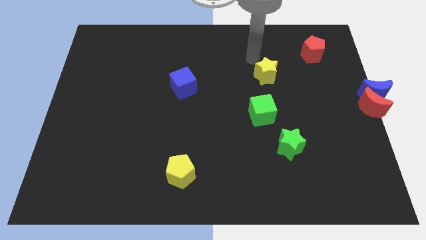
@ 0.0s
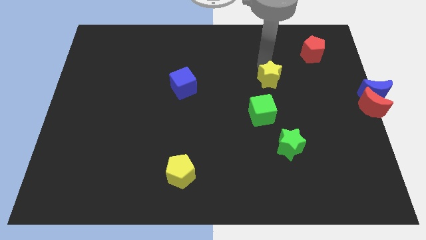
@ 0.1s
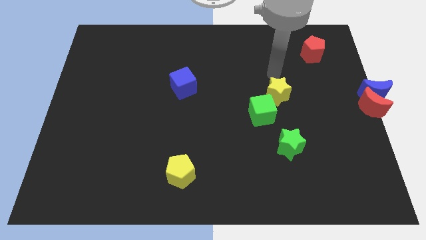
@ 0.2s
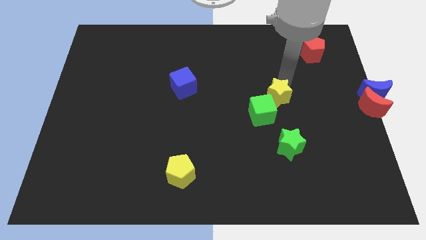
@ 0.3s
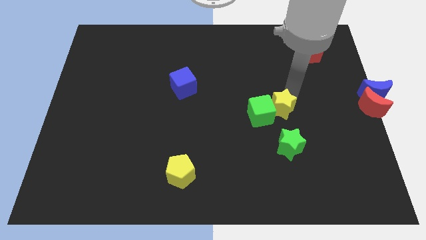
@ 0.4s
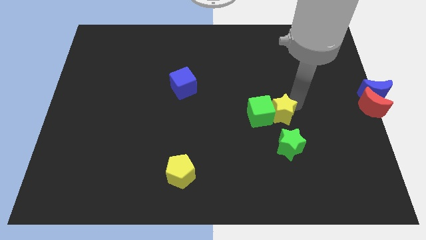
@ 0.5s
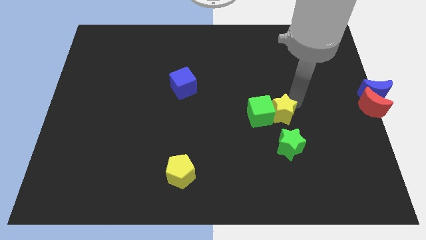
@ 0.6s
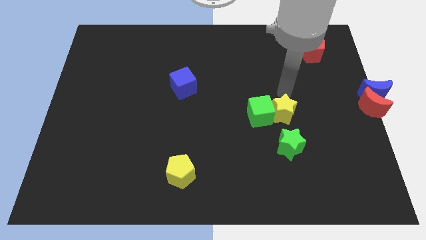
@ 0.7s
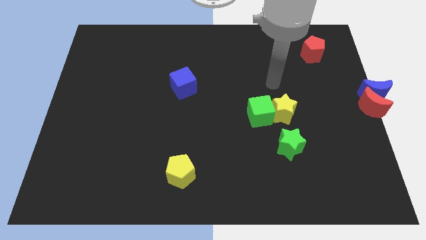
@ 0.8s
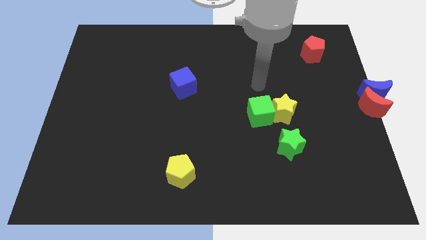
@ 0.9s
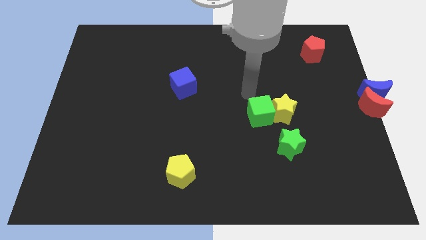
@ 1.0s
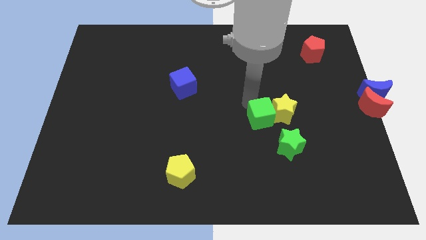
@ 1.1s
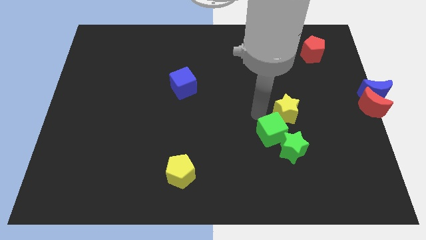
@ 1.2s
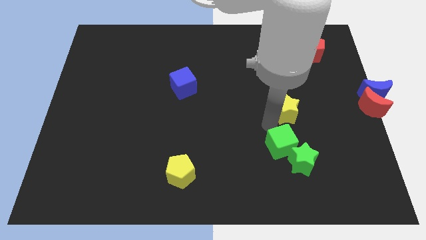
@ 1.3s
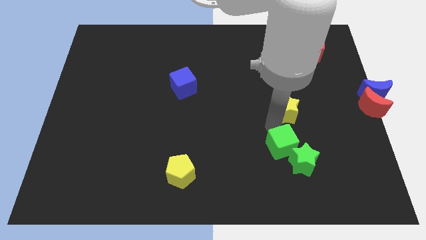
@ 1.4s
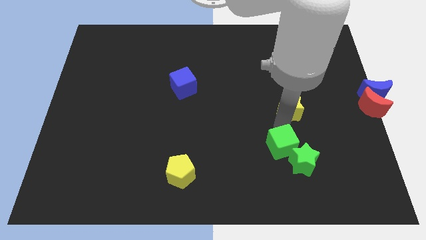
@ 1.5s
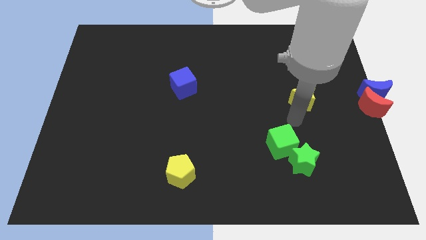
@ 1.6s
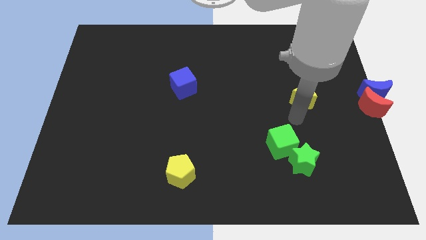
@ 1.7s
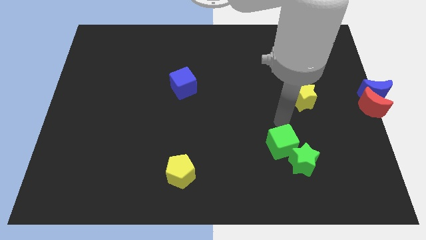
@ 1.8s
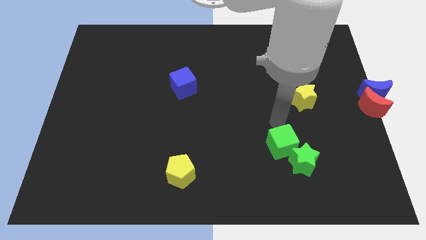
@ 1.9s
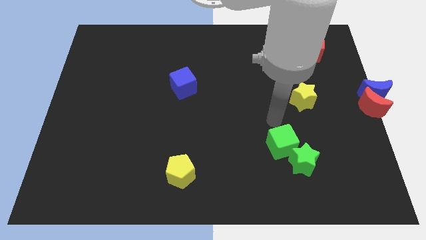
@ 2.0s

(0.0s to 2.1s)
put the green blocks together

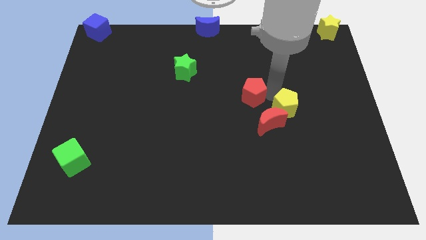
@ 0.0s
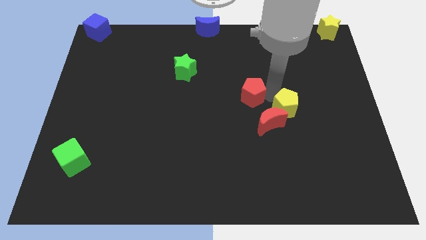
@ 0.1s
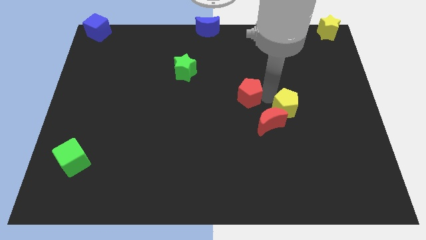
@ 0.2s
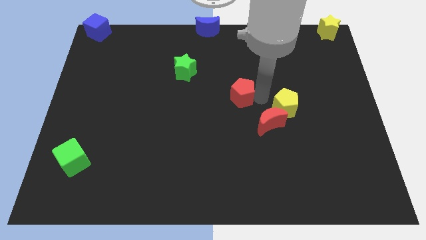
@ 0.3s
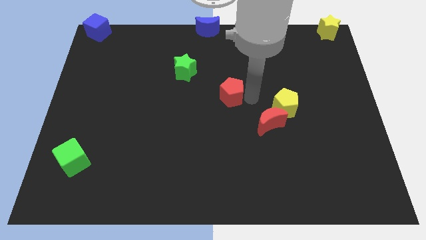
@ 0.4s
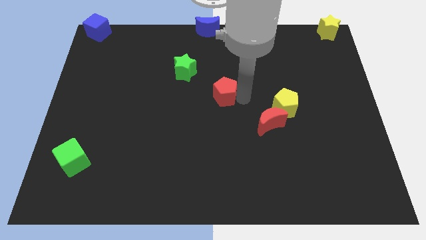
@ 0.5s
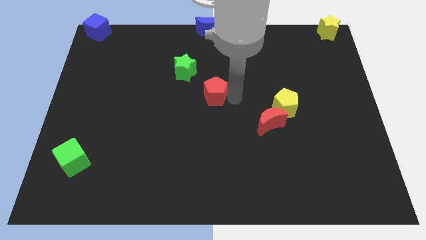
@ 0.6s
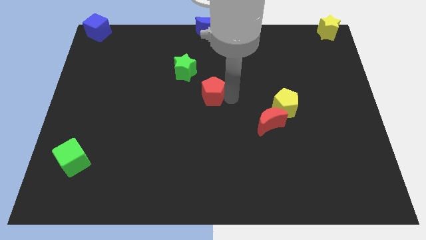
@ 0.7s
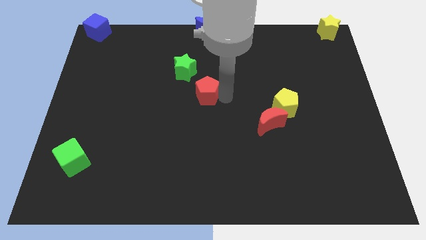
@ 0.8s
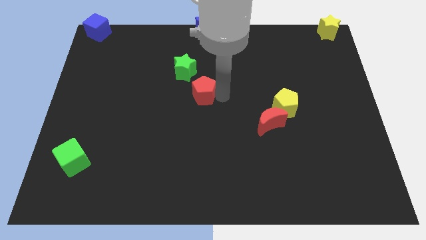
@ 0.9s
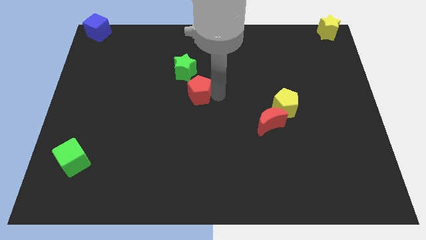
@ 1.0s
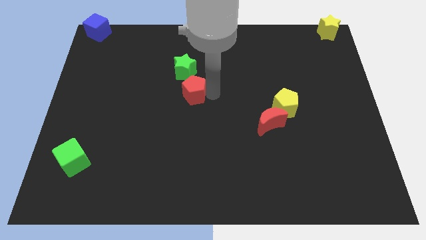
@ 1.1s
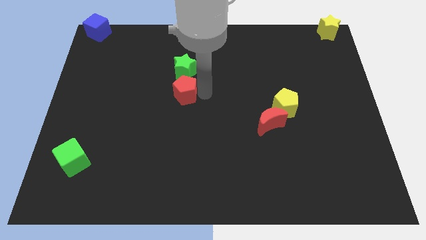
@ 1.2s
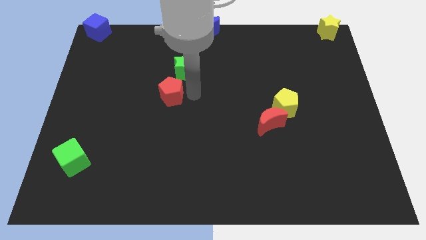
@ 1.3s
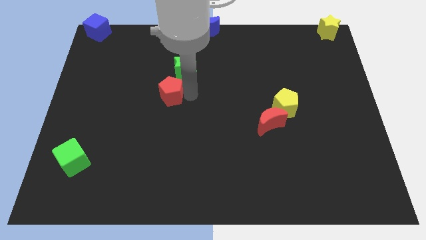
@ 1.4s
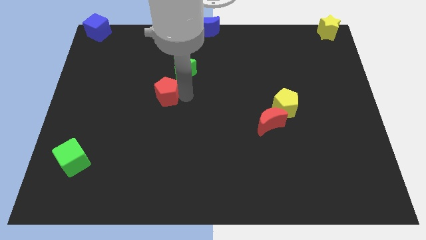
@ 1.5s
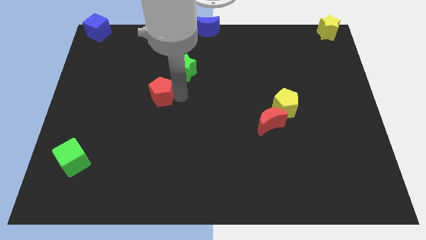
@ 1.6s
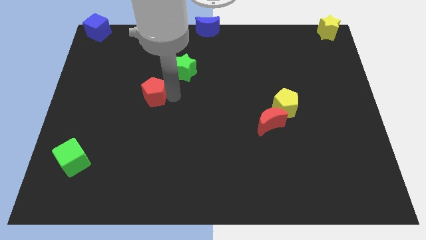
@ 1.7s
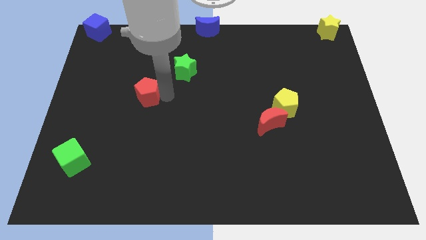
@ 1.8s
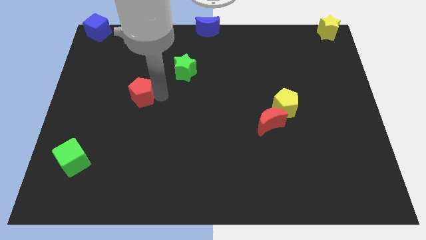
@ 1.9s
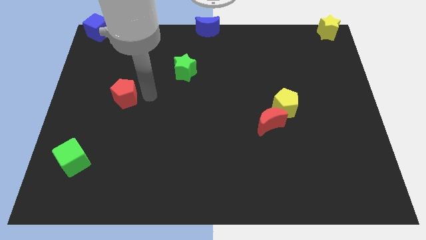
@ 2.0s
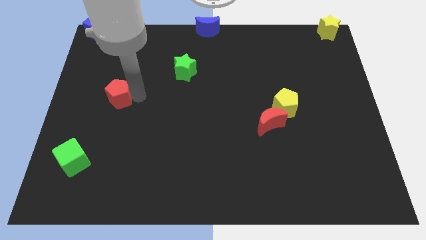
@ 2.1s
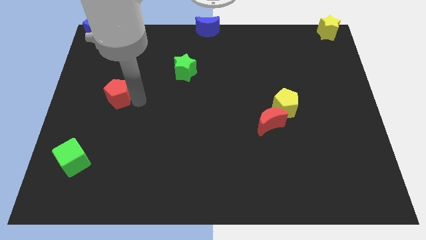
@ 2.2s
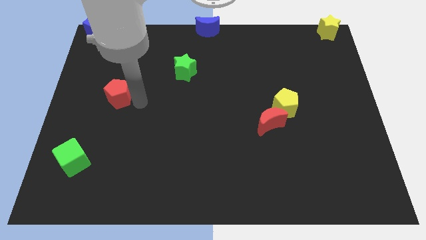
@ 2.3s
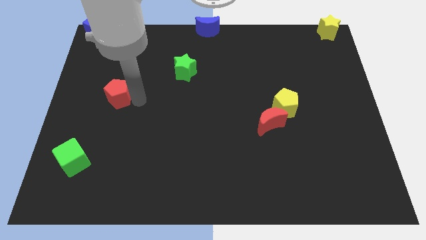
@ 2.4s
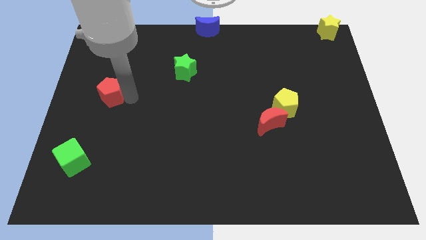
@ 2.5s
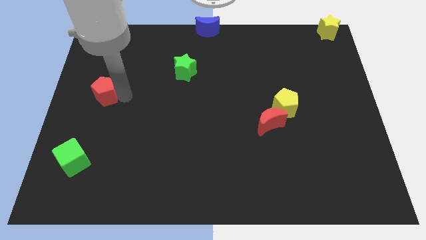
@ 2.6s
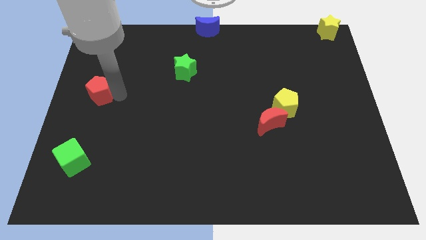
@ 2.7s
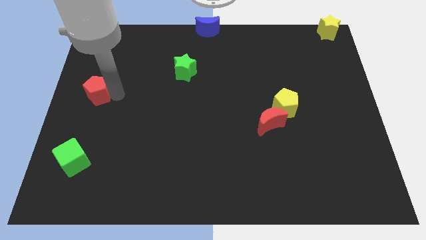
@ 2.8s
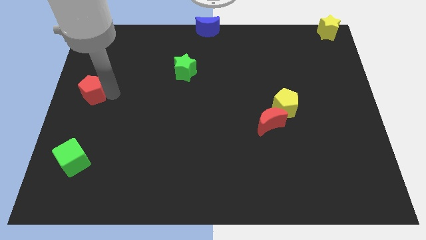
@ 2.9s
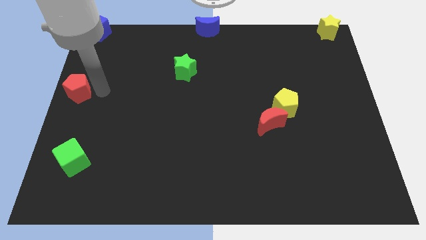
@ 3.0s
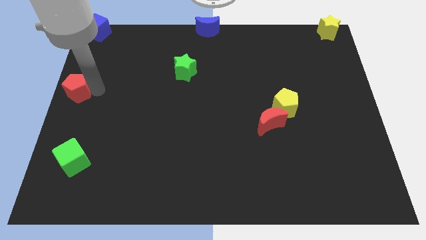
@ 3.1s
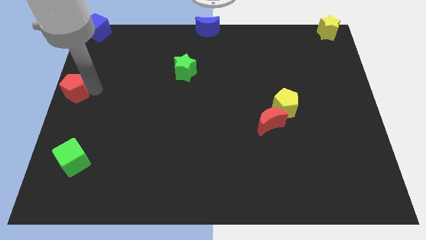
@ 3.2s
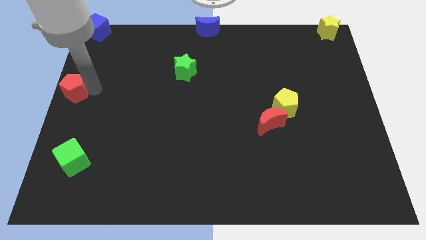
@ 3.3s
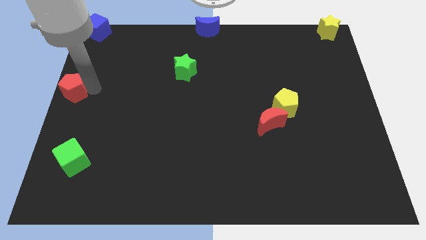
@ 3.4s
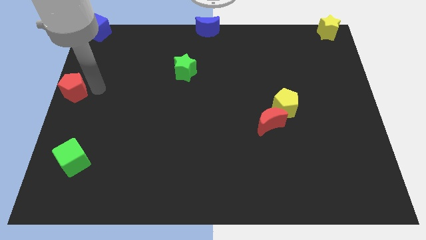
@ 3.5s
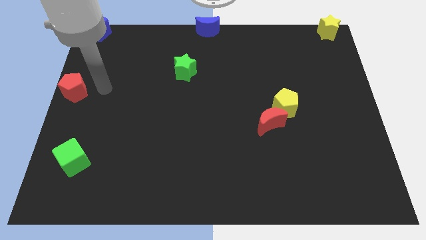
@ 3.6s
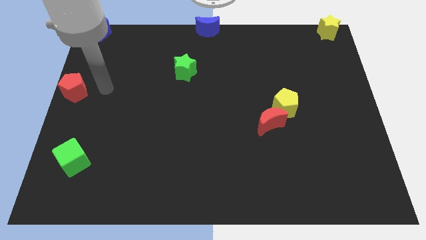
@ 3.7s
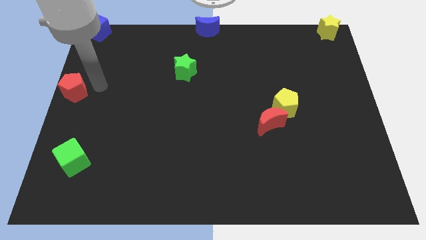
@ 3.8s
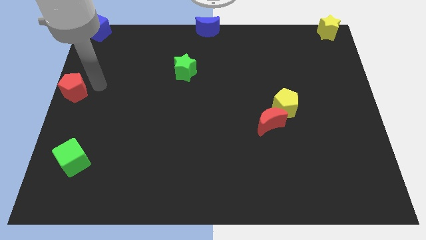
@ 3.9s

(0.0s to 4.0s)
put the red pentagon to the left center of the board

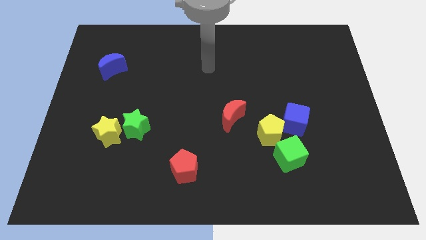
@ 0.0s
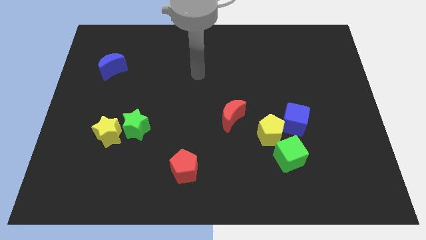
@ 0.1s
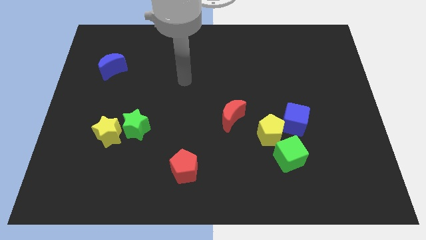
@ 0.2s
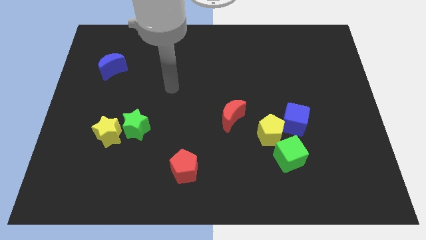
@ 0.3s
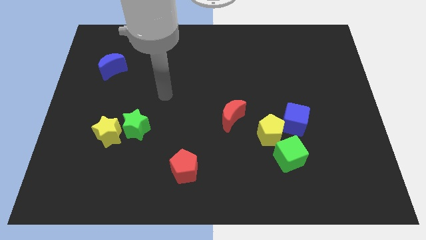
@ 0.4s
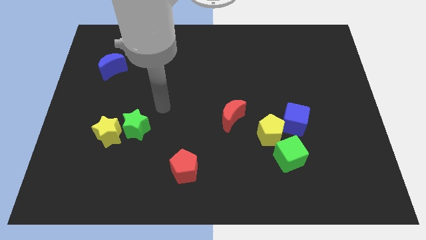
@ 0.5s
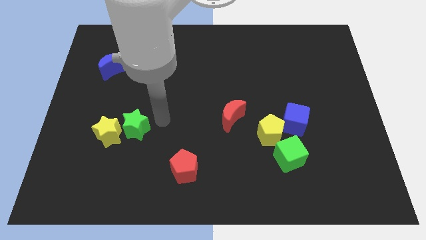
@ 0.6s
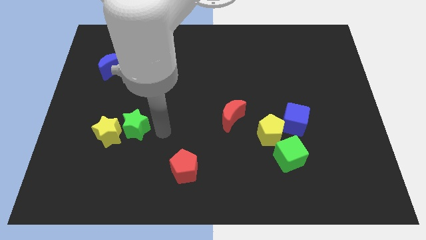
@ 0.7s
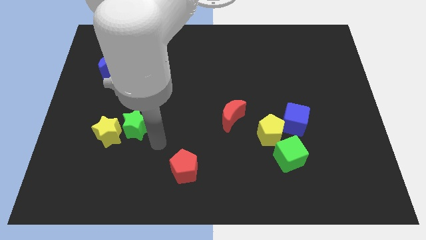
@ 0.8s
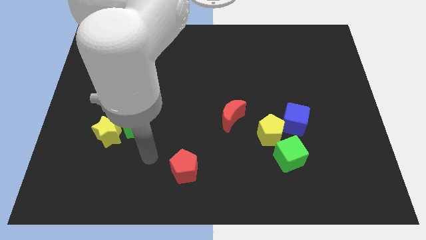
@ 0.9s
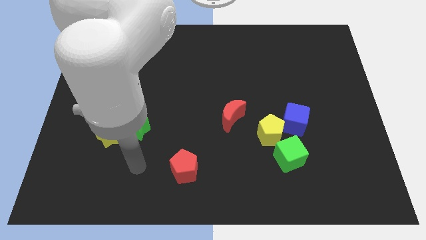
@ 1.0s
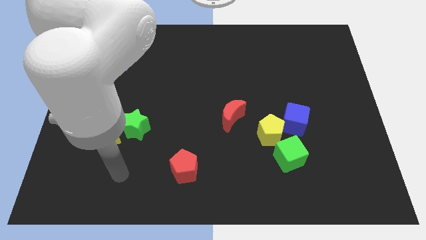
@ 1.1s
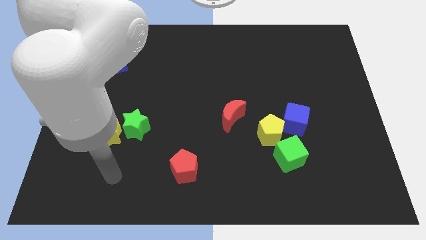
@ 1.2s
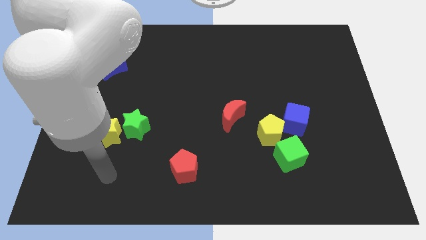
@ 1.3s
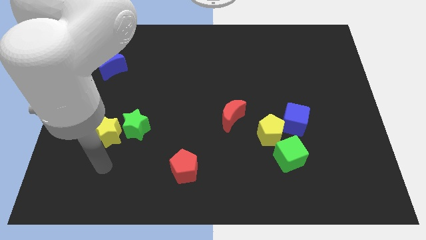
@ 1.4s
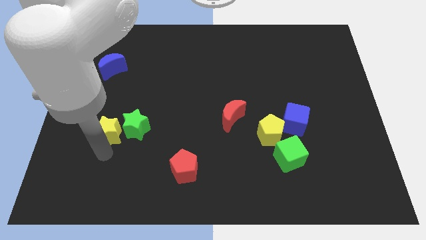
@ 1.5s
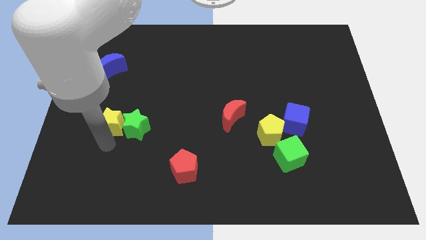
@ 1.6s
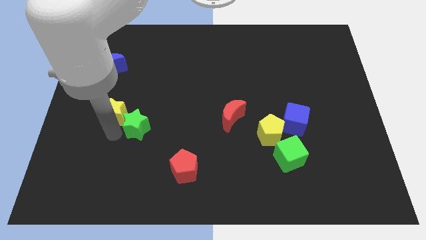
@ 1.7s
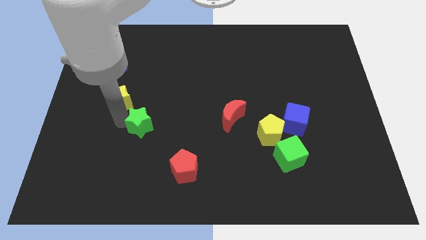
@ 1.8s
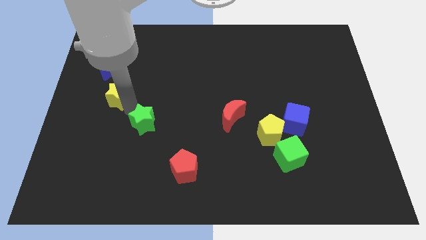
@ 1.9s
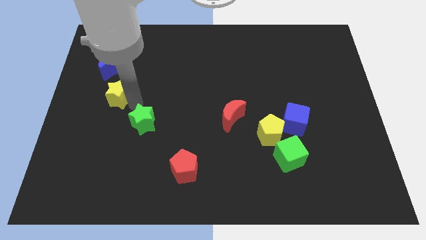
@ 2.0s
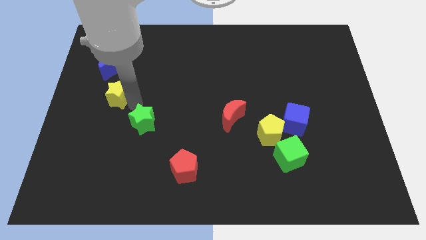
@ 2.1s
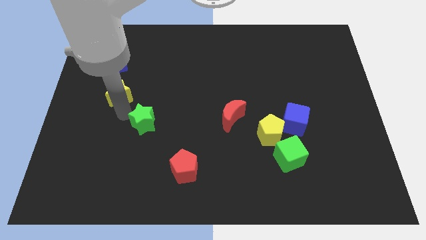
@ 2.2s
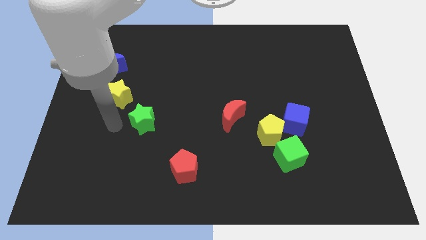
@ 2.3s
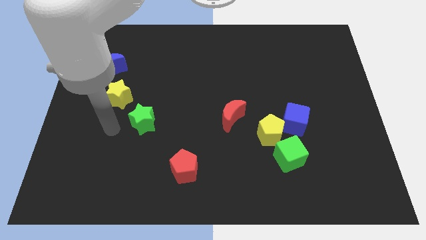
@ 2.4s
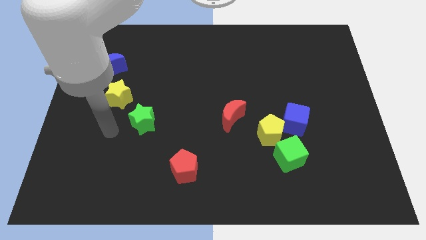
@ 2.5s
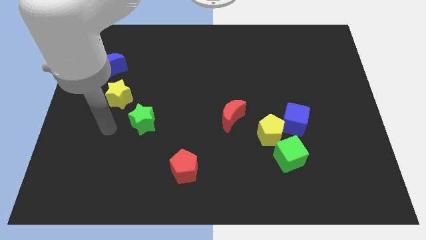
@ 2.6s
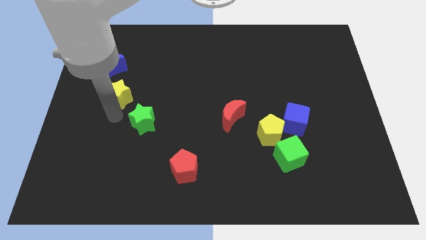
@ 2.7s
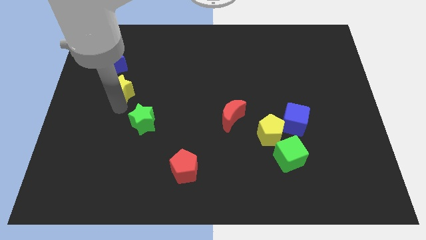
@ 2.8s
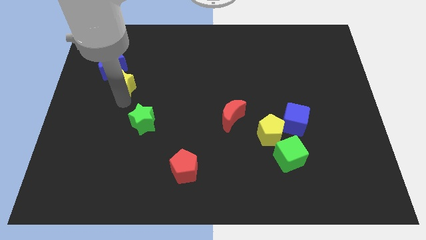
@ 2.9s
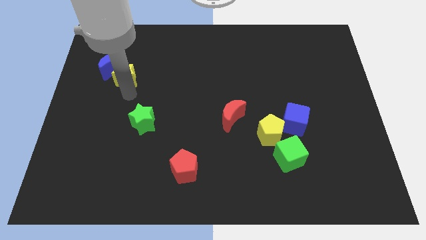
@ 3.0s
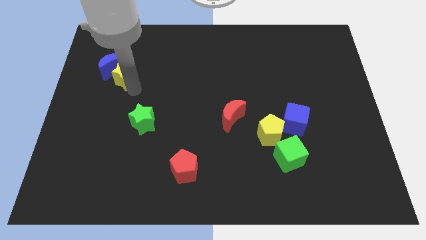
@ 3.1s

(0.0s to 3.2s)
move yellow star close to blue crescent
